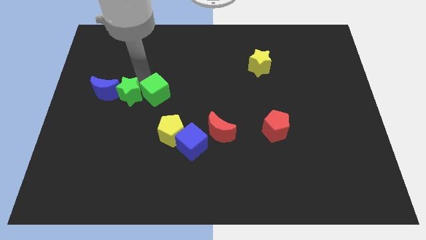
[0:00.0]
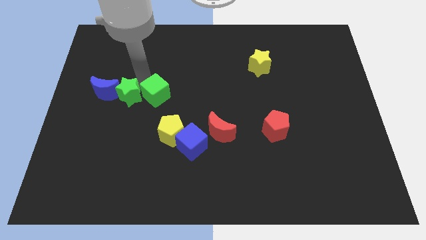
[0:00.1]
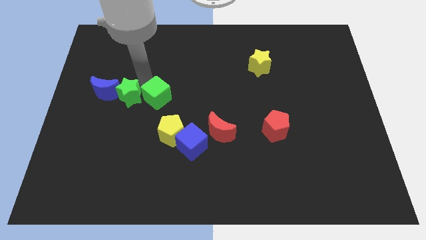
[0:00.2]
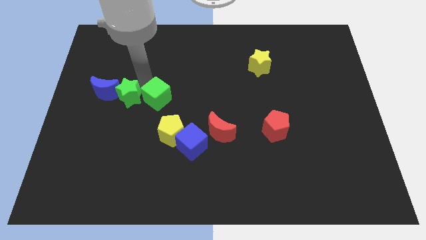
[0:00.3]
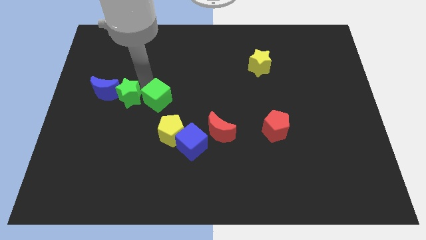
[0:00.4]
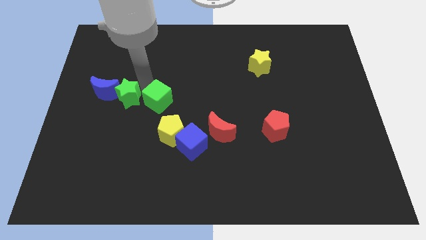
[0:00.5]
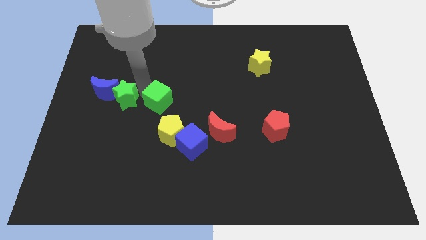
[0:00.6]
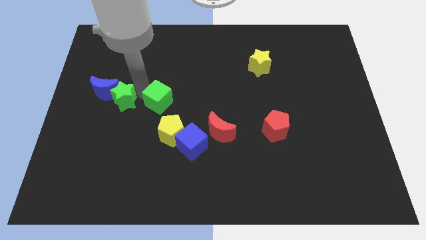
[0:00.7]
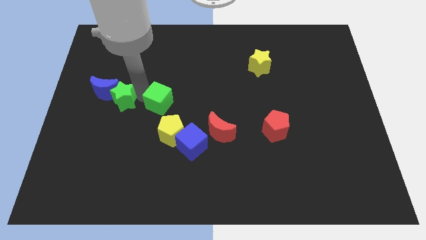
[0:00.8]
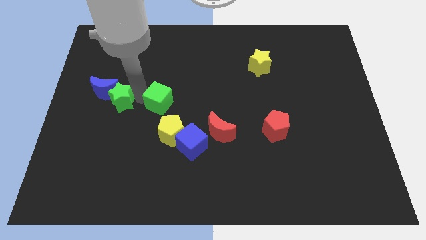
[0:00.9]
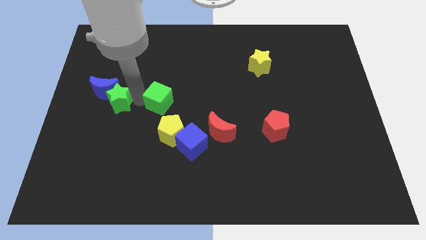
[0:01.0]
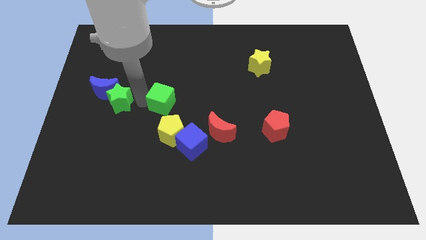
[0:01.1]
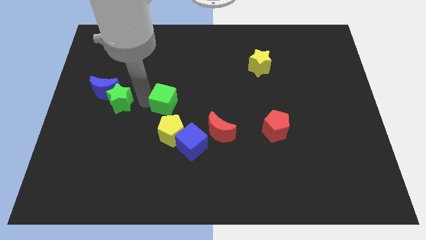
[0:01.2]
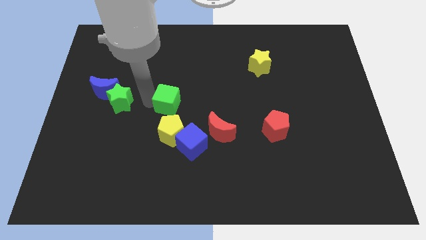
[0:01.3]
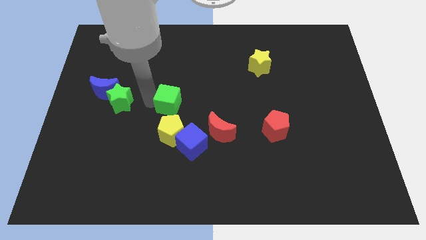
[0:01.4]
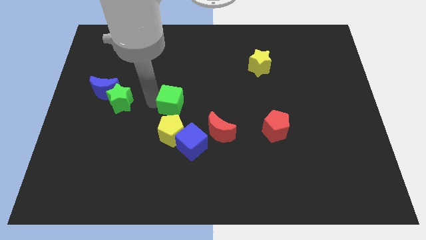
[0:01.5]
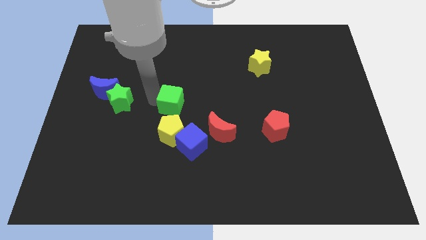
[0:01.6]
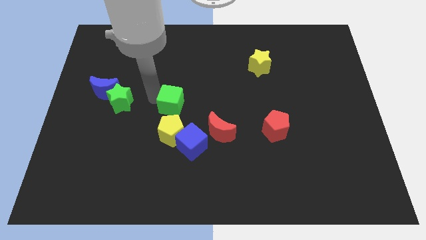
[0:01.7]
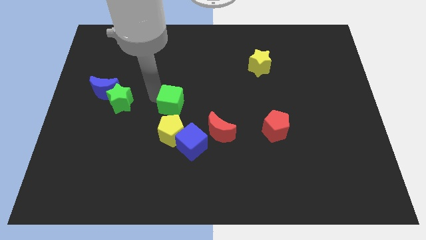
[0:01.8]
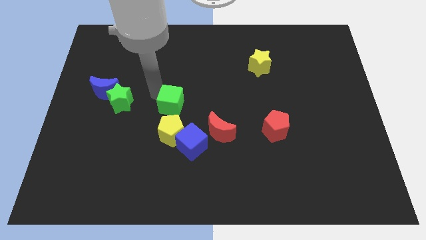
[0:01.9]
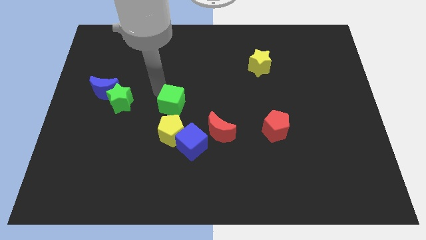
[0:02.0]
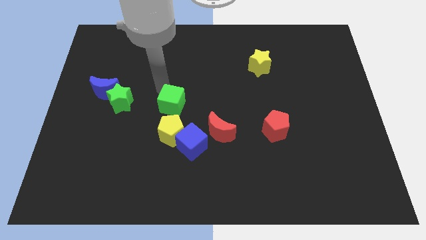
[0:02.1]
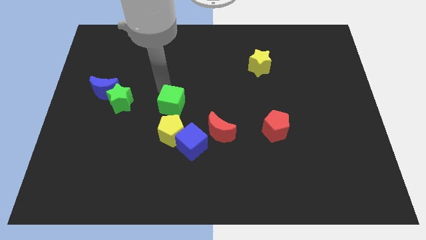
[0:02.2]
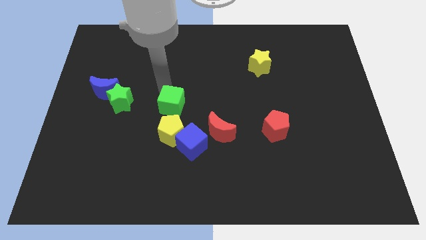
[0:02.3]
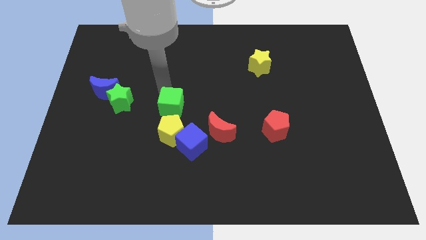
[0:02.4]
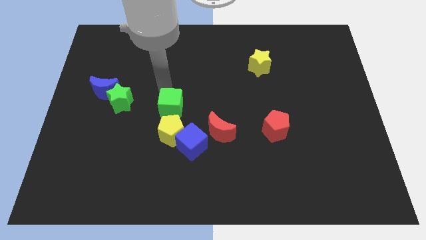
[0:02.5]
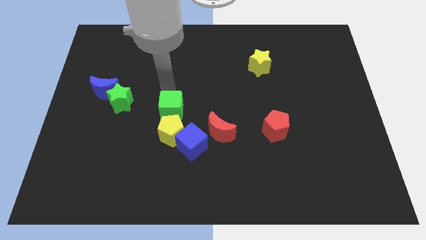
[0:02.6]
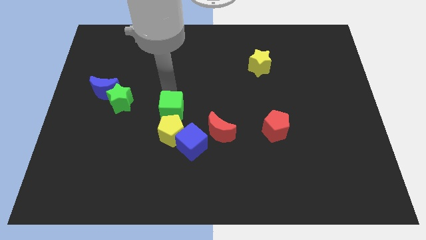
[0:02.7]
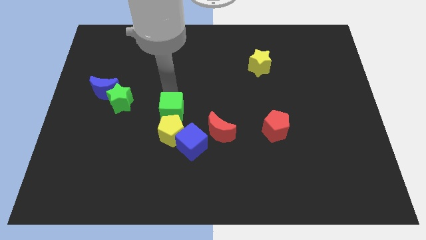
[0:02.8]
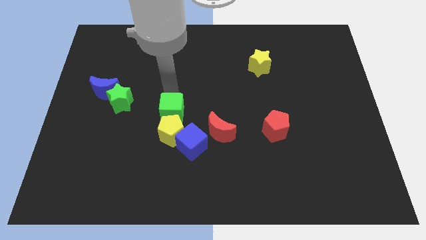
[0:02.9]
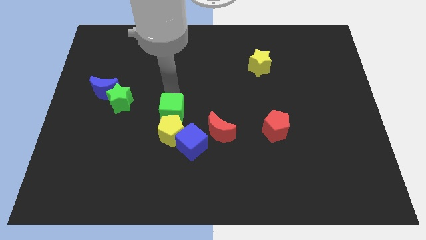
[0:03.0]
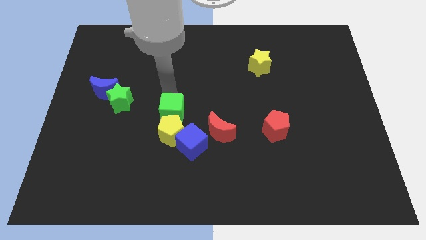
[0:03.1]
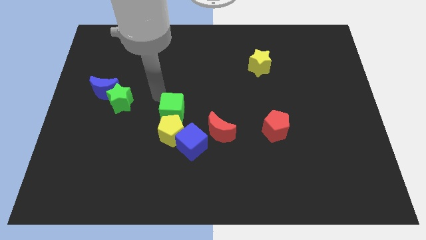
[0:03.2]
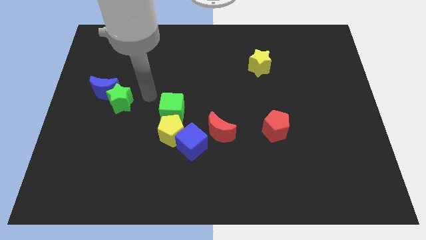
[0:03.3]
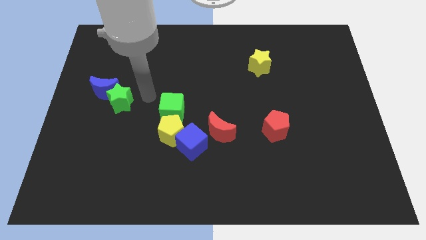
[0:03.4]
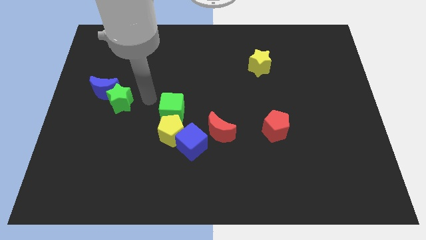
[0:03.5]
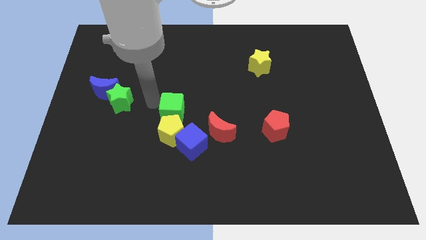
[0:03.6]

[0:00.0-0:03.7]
place green cube above yellow pentagon

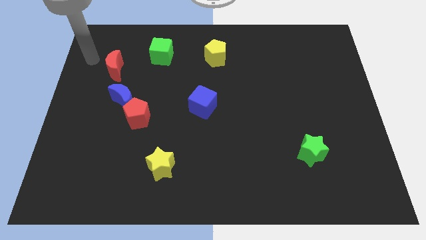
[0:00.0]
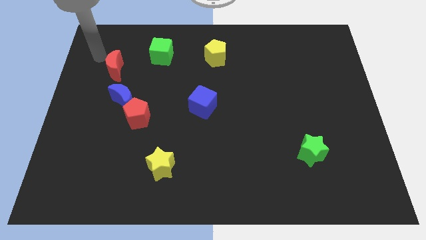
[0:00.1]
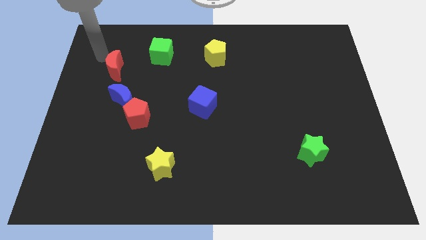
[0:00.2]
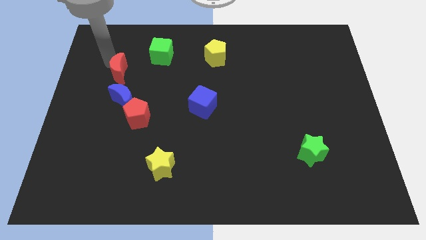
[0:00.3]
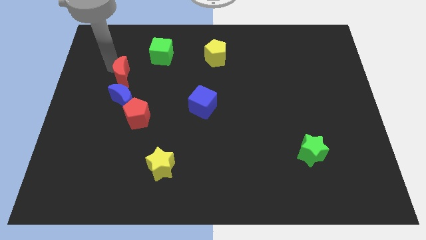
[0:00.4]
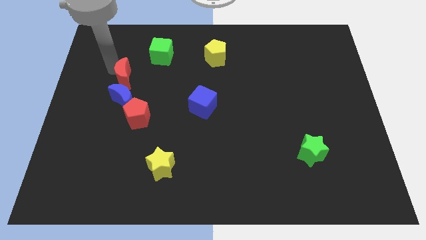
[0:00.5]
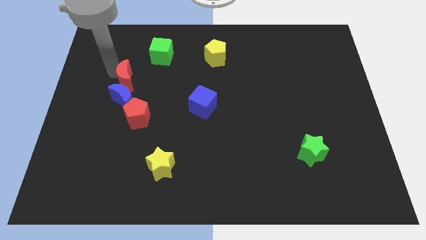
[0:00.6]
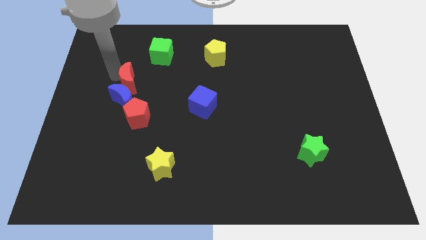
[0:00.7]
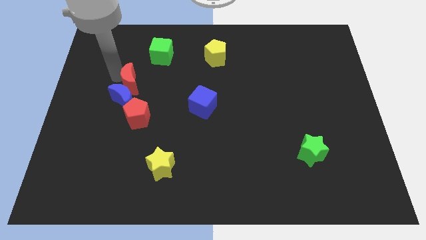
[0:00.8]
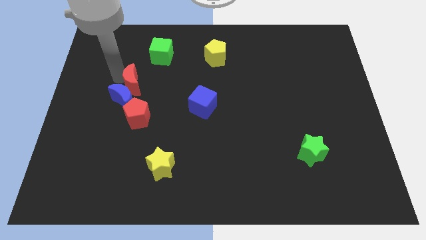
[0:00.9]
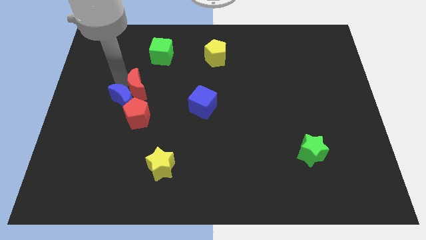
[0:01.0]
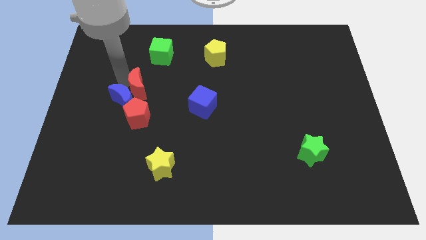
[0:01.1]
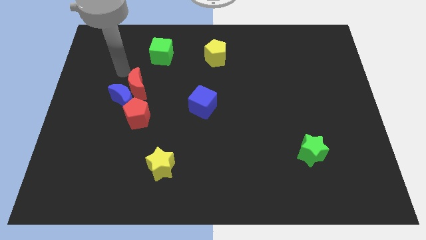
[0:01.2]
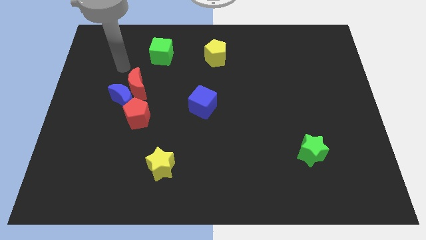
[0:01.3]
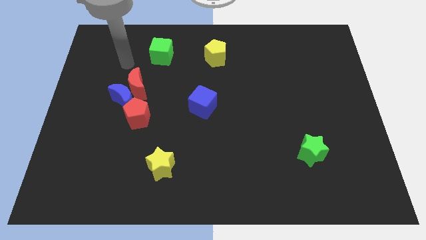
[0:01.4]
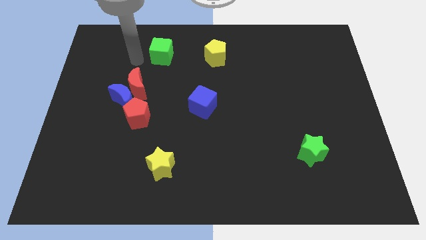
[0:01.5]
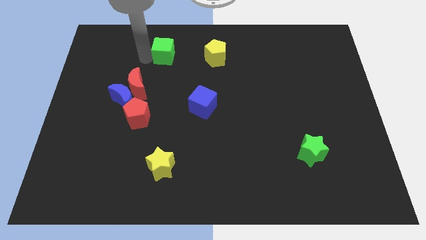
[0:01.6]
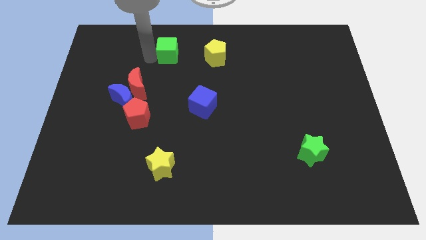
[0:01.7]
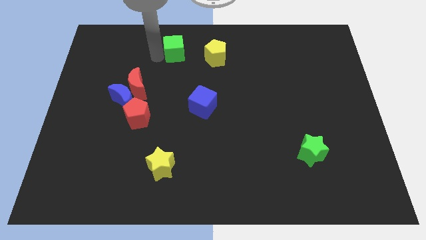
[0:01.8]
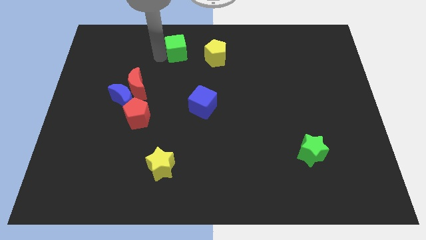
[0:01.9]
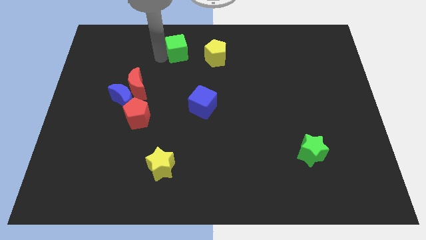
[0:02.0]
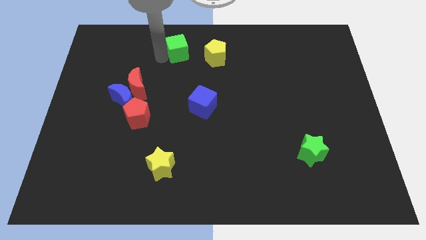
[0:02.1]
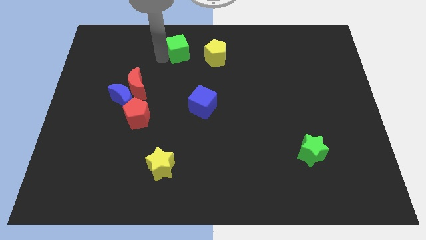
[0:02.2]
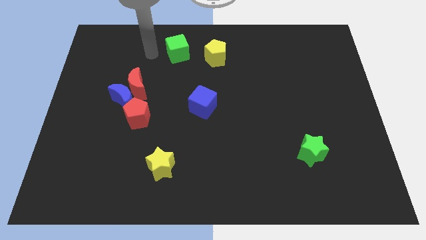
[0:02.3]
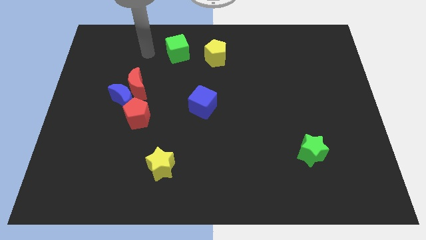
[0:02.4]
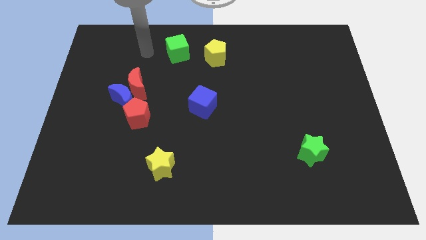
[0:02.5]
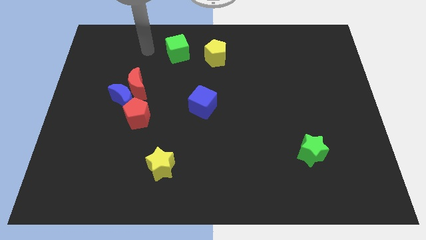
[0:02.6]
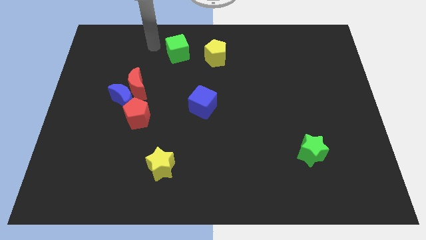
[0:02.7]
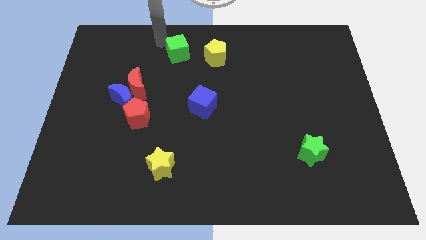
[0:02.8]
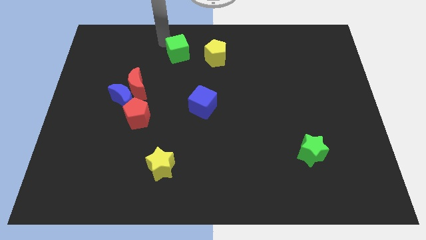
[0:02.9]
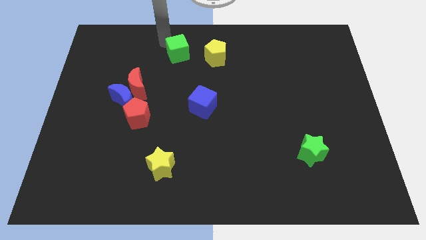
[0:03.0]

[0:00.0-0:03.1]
push the red crescent towards the blue crescent

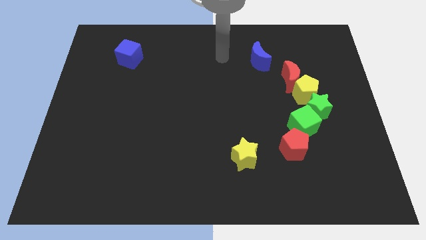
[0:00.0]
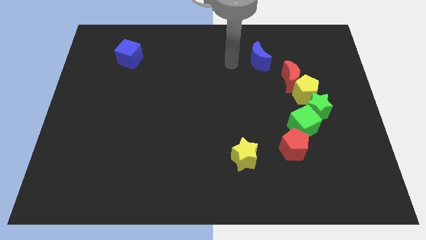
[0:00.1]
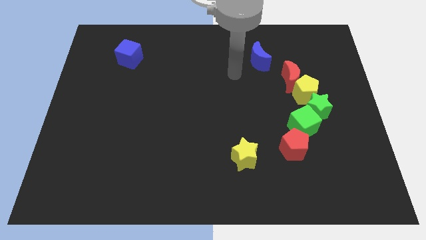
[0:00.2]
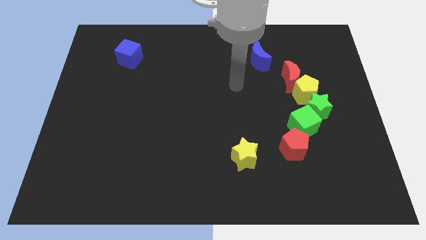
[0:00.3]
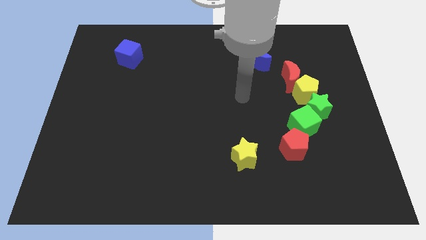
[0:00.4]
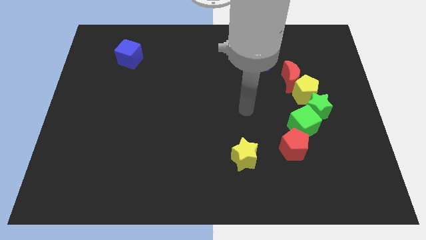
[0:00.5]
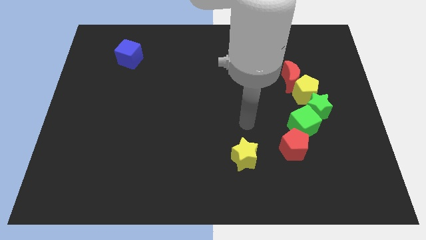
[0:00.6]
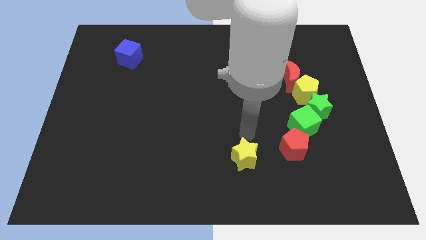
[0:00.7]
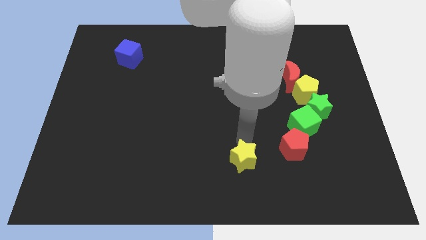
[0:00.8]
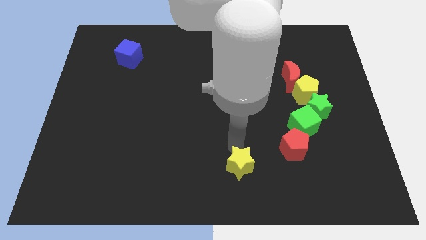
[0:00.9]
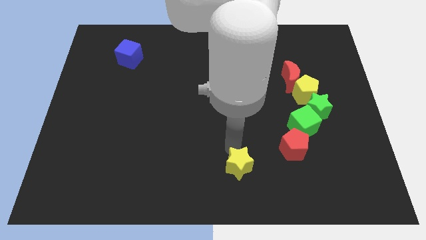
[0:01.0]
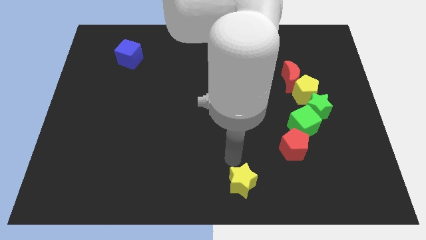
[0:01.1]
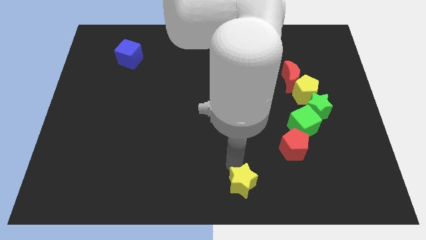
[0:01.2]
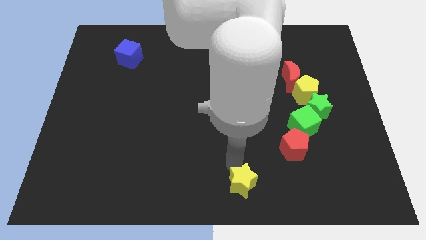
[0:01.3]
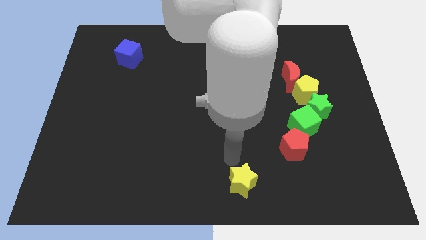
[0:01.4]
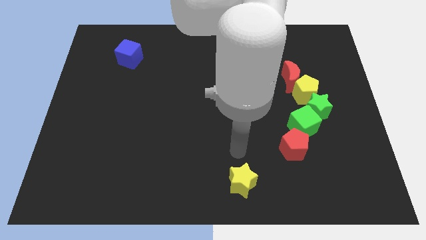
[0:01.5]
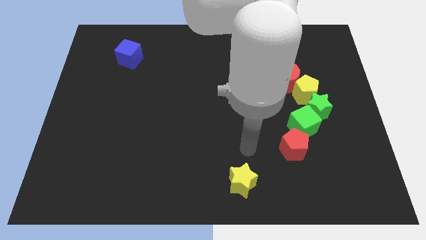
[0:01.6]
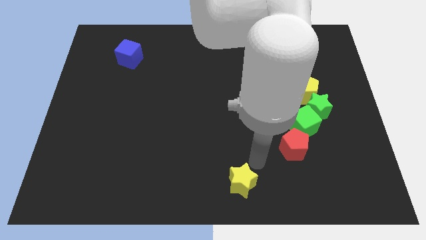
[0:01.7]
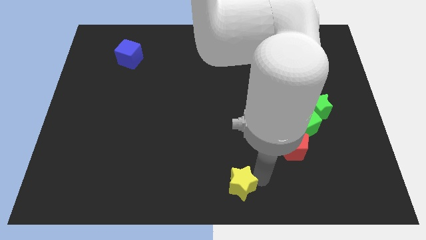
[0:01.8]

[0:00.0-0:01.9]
push the yellow star to the bottom

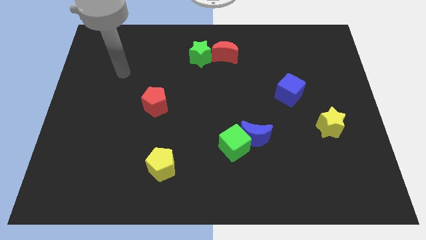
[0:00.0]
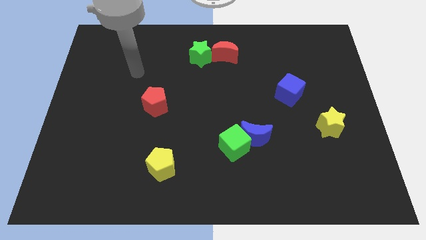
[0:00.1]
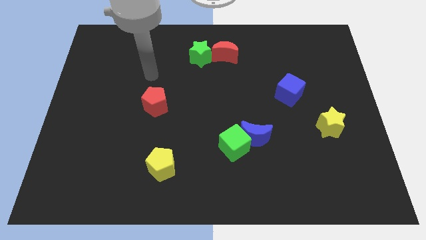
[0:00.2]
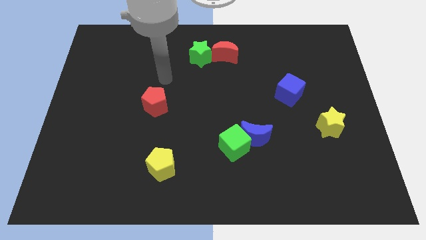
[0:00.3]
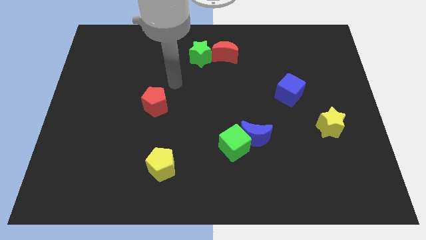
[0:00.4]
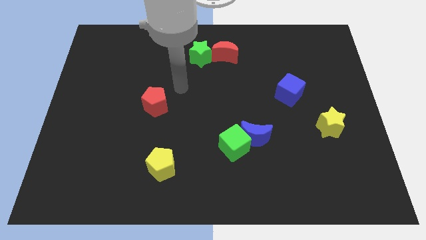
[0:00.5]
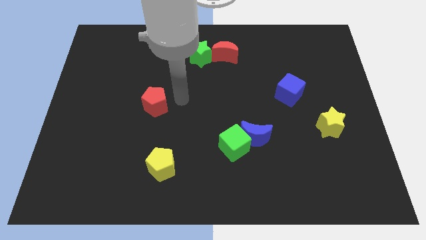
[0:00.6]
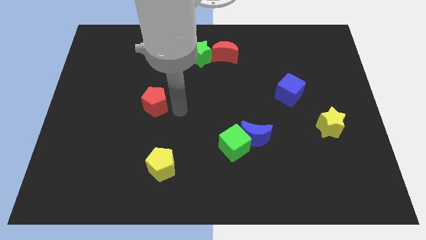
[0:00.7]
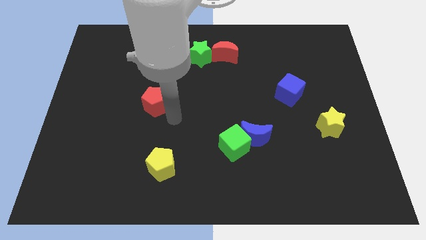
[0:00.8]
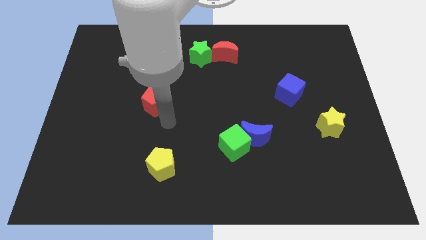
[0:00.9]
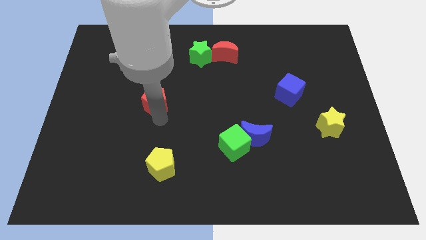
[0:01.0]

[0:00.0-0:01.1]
move your arm to the bottom of the red pentagon
